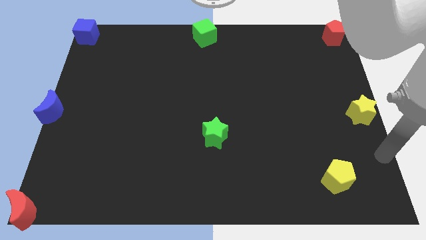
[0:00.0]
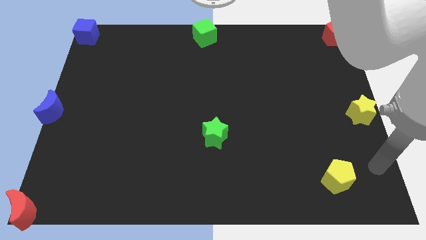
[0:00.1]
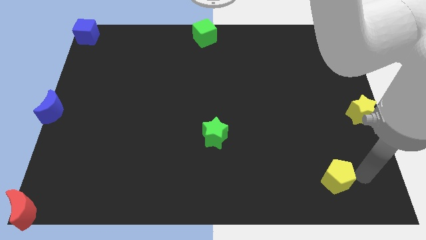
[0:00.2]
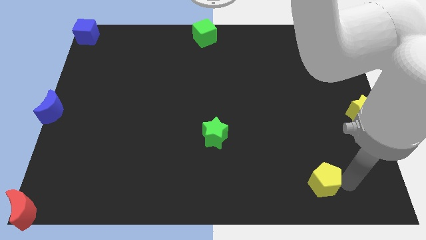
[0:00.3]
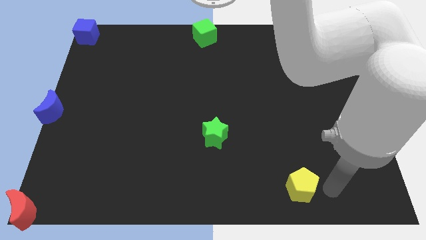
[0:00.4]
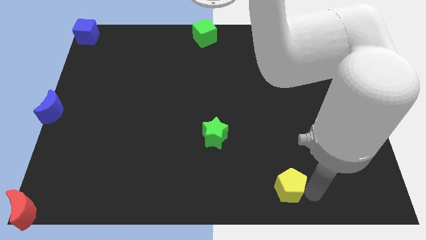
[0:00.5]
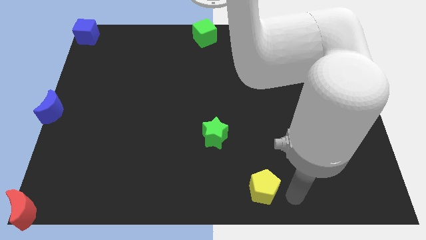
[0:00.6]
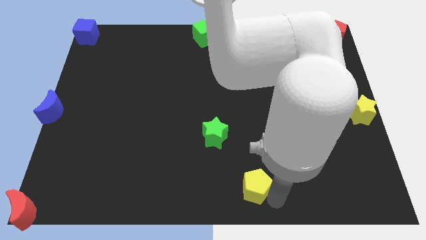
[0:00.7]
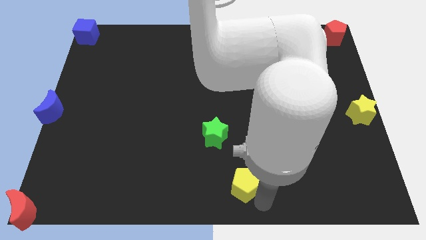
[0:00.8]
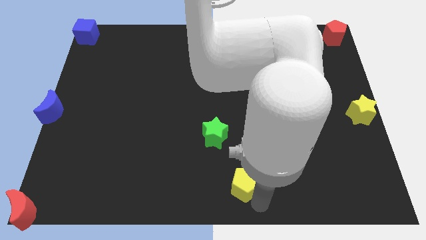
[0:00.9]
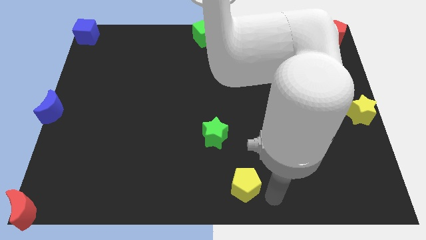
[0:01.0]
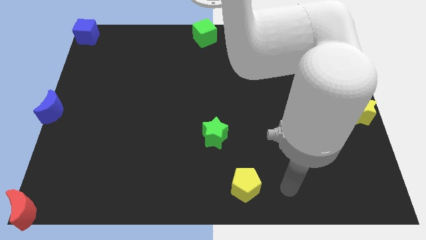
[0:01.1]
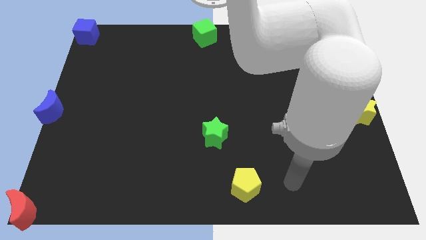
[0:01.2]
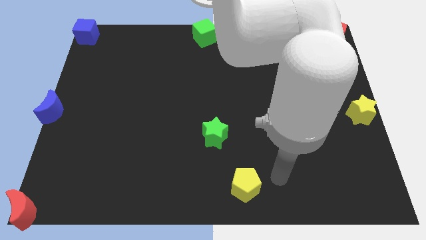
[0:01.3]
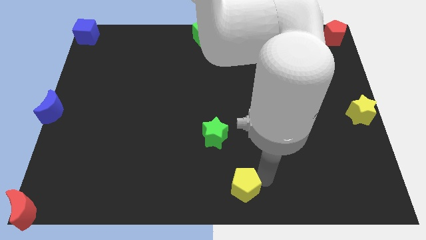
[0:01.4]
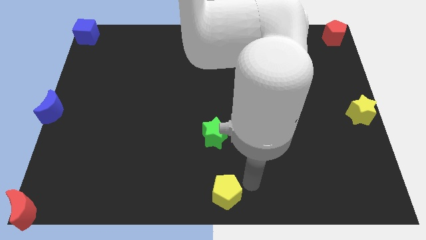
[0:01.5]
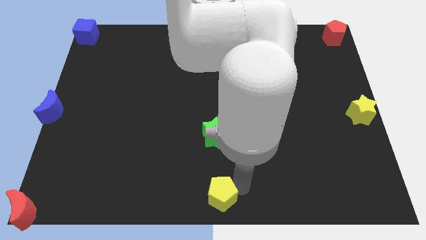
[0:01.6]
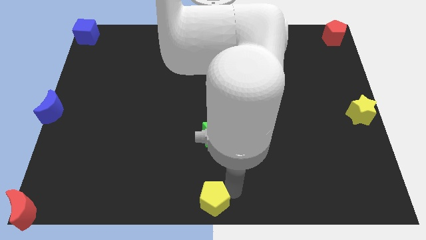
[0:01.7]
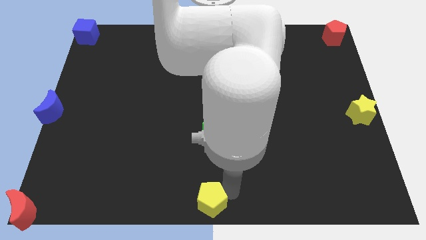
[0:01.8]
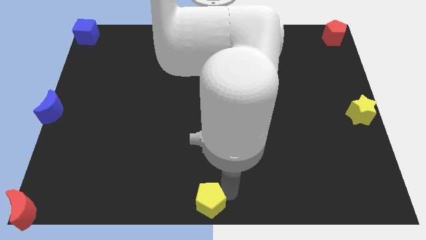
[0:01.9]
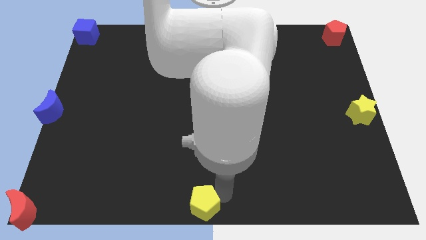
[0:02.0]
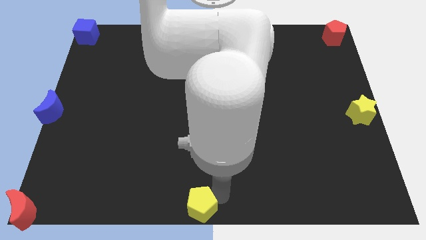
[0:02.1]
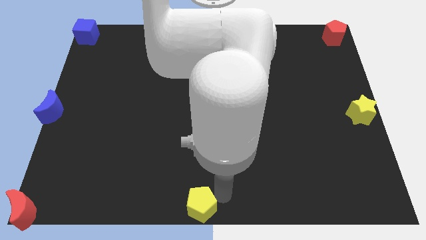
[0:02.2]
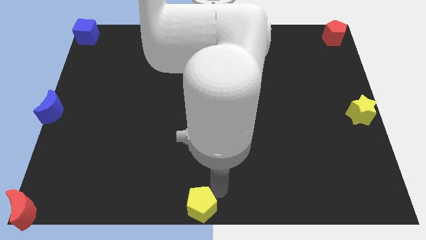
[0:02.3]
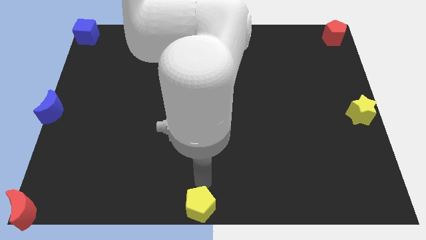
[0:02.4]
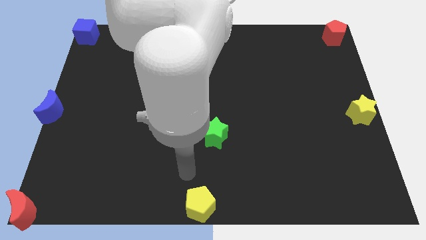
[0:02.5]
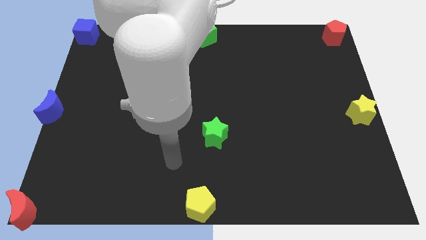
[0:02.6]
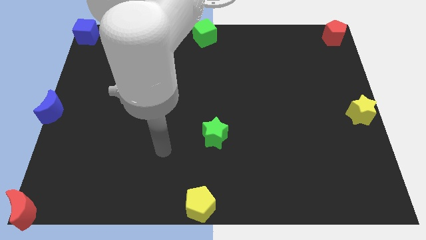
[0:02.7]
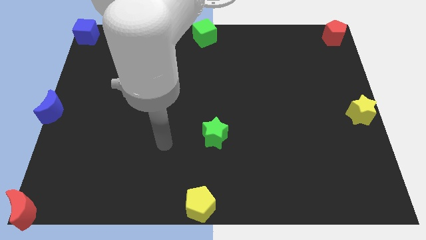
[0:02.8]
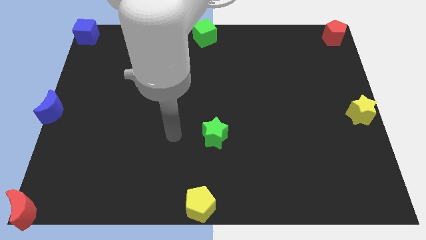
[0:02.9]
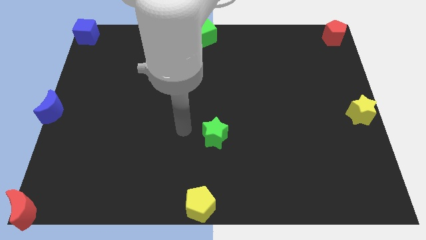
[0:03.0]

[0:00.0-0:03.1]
drag yellow pentagon to the bottom center

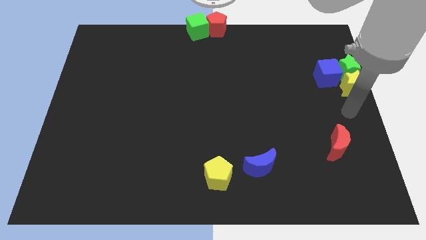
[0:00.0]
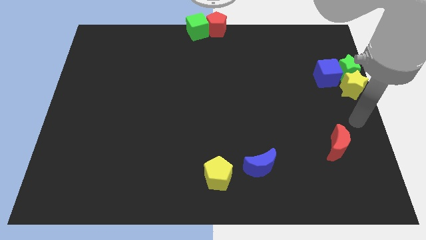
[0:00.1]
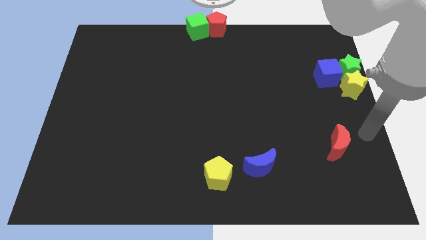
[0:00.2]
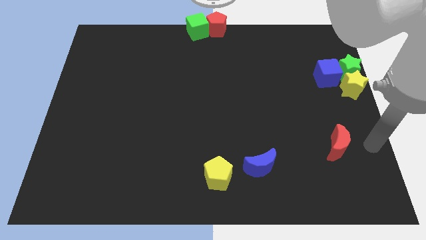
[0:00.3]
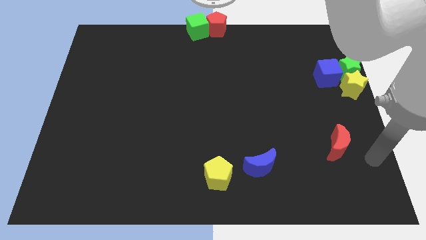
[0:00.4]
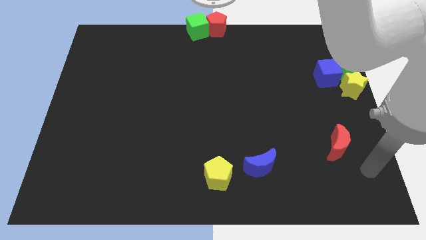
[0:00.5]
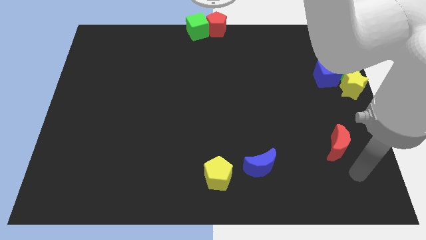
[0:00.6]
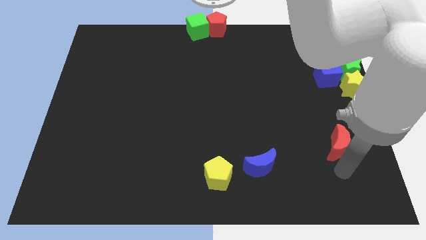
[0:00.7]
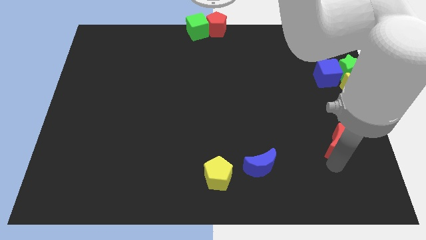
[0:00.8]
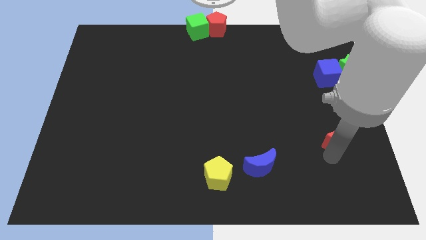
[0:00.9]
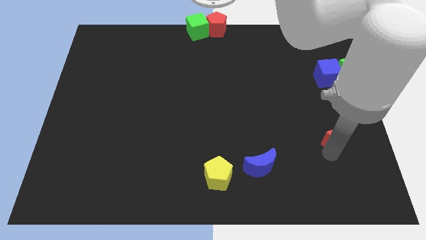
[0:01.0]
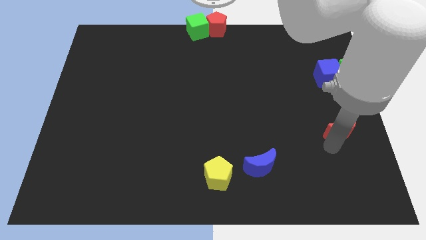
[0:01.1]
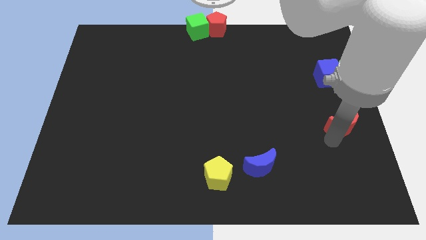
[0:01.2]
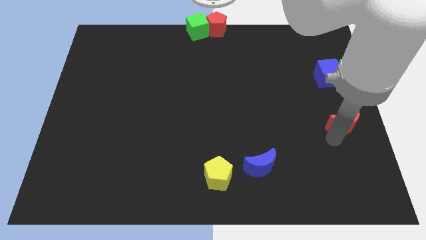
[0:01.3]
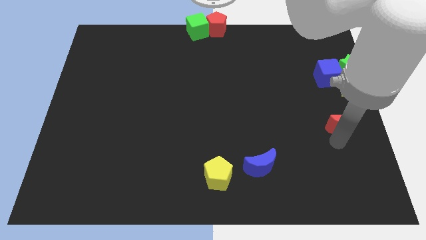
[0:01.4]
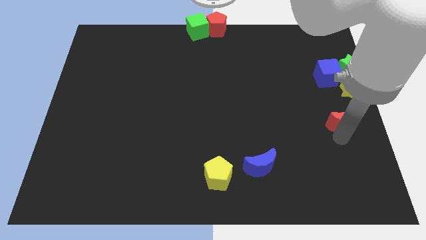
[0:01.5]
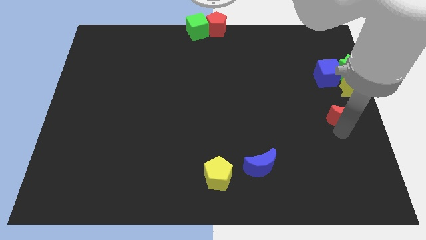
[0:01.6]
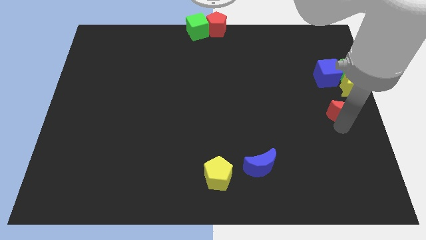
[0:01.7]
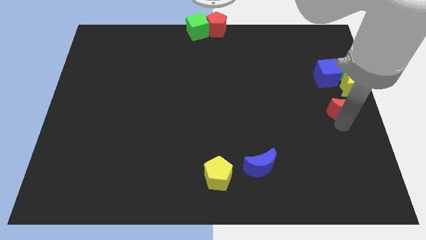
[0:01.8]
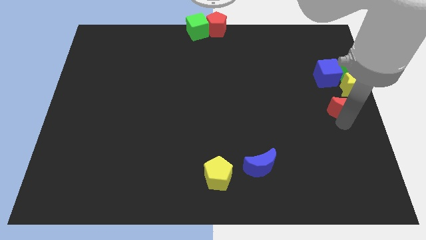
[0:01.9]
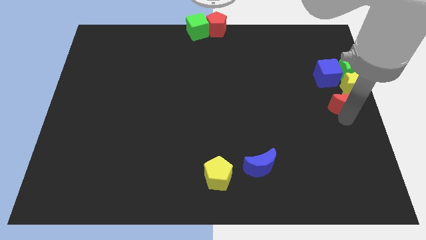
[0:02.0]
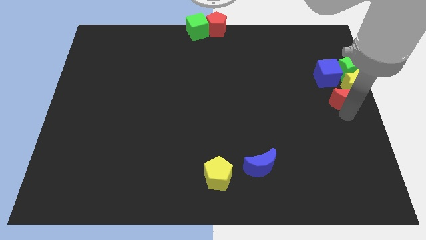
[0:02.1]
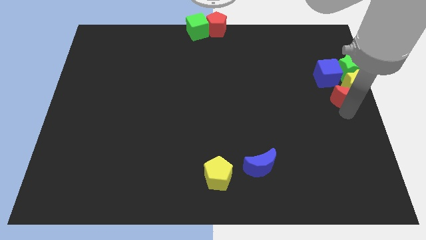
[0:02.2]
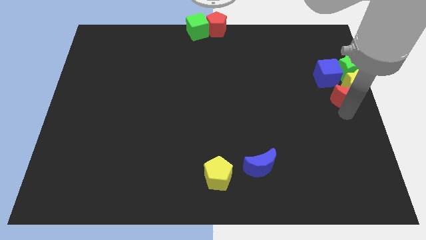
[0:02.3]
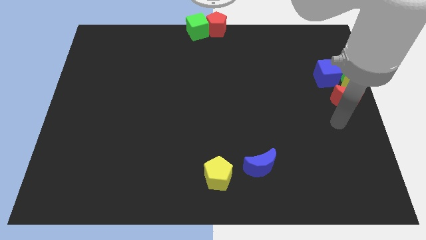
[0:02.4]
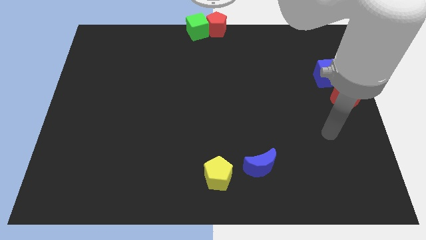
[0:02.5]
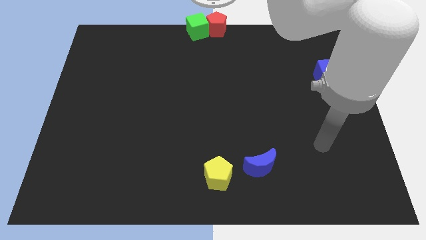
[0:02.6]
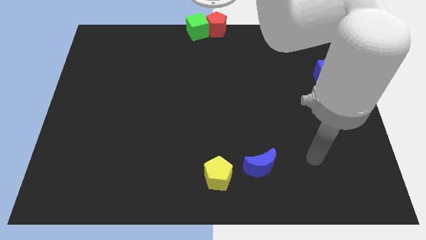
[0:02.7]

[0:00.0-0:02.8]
push red moon into group of blocks

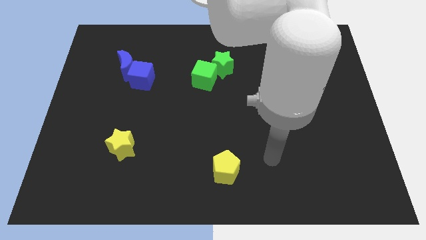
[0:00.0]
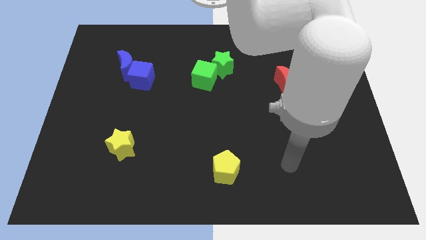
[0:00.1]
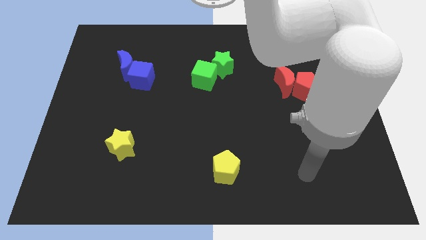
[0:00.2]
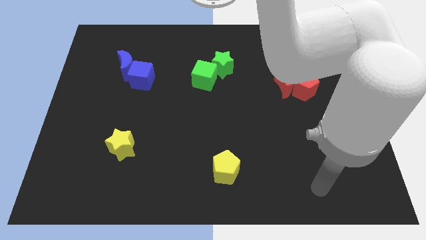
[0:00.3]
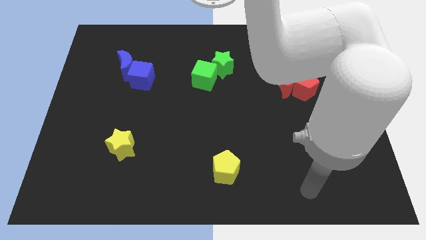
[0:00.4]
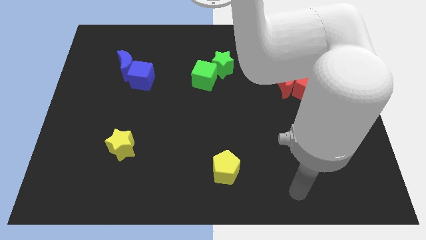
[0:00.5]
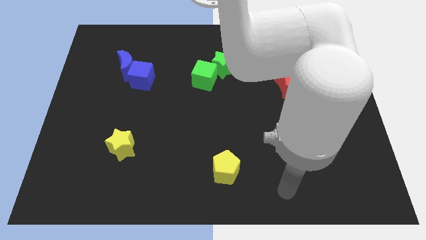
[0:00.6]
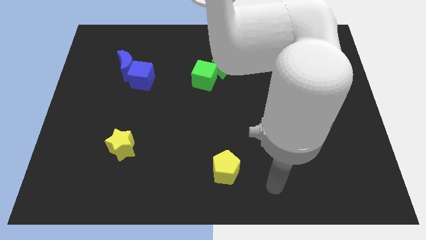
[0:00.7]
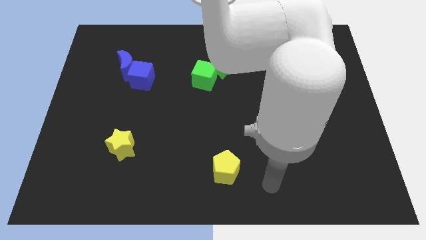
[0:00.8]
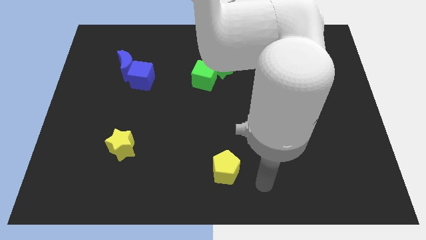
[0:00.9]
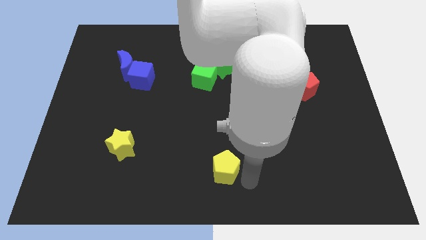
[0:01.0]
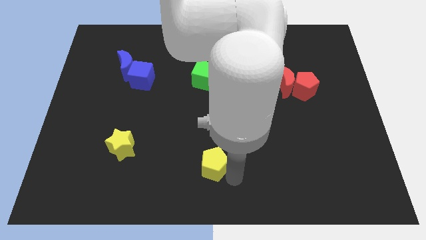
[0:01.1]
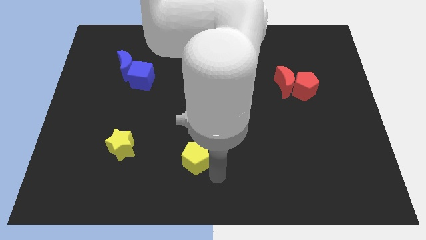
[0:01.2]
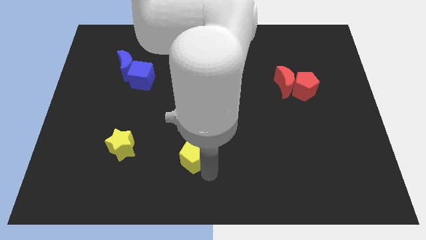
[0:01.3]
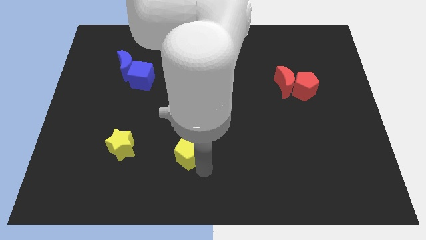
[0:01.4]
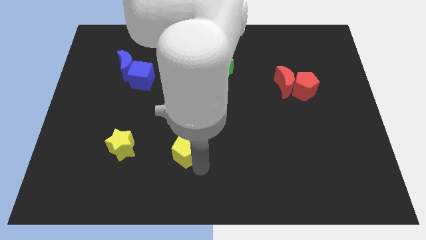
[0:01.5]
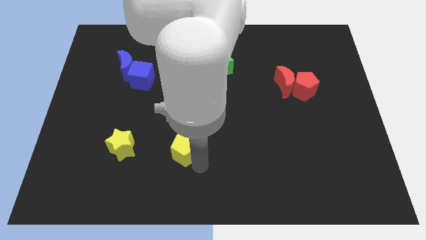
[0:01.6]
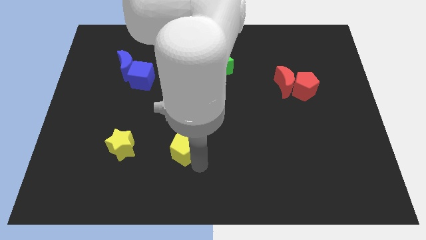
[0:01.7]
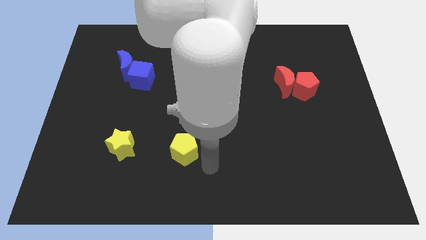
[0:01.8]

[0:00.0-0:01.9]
move the yellow pentagon horizontally right to the yellow star

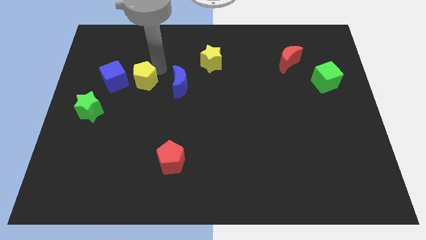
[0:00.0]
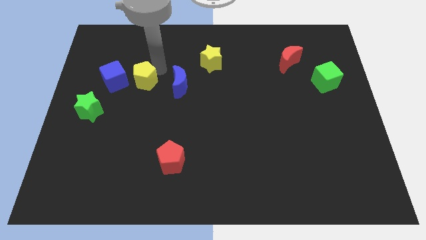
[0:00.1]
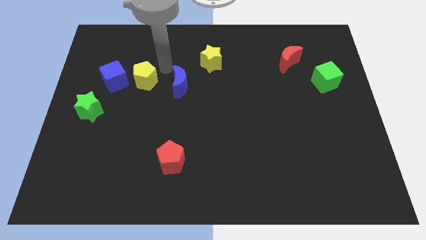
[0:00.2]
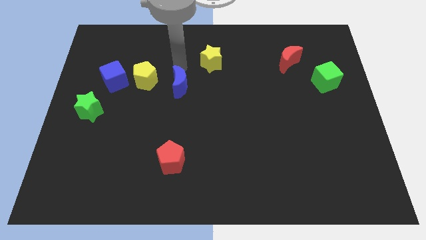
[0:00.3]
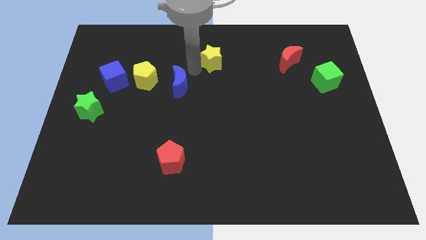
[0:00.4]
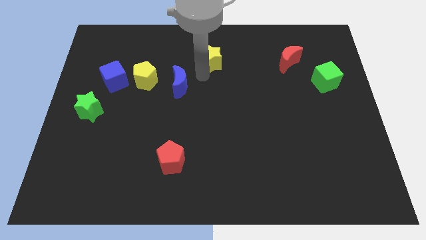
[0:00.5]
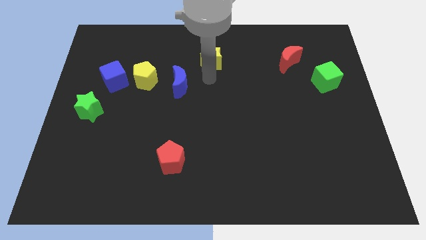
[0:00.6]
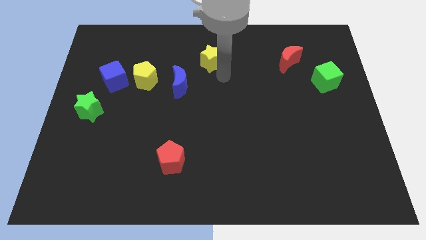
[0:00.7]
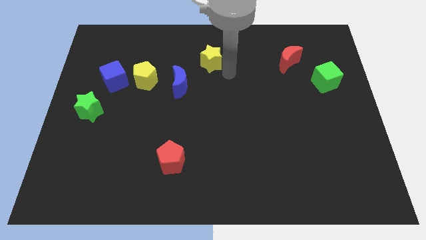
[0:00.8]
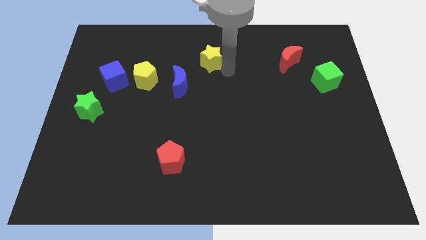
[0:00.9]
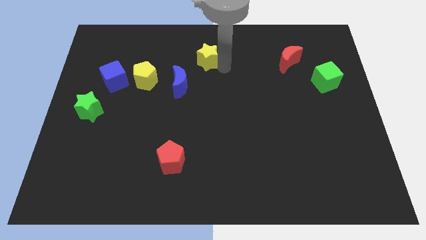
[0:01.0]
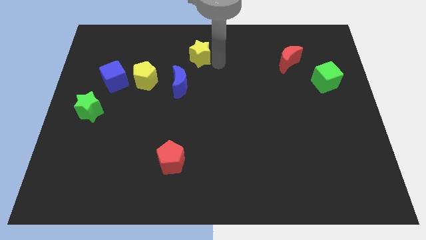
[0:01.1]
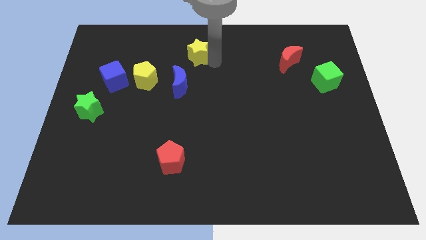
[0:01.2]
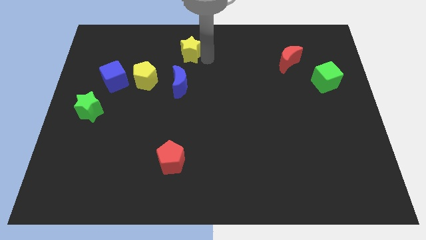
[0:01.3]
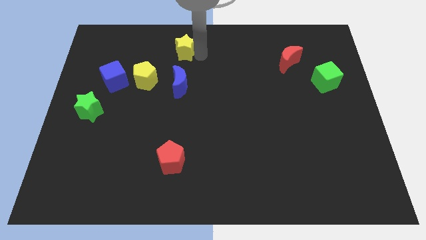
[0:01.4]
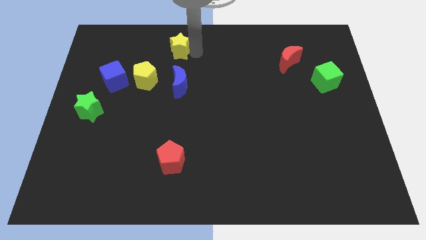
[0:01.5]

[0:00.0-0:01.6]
place the yellow star above the blue moon
